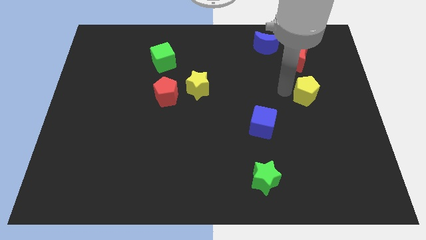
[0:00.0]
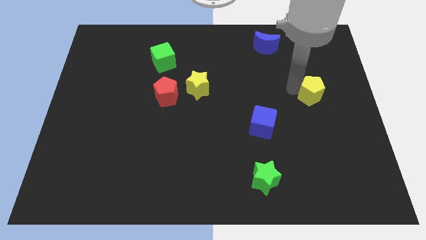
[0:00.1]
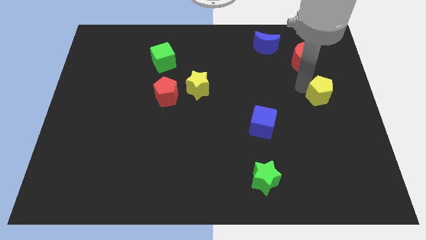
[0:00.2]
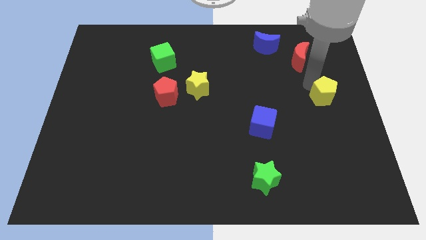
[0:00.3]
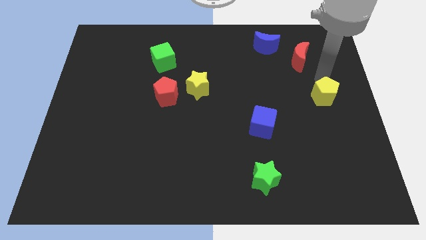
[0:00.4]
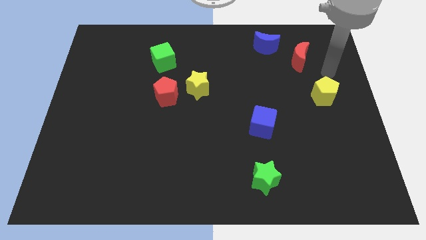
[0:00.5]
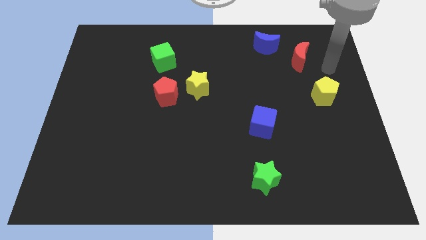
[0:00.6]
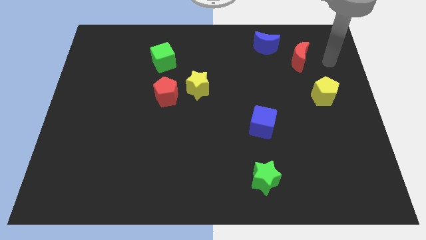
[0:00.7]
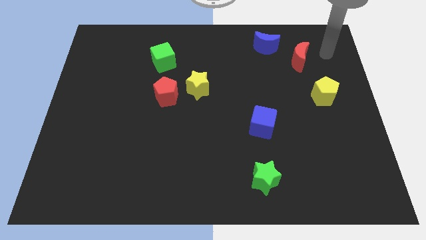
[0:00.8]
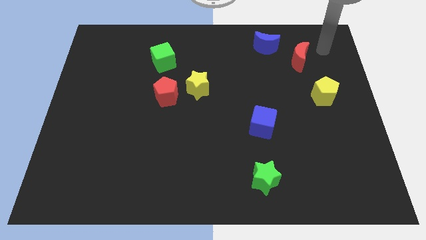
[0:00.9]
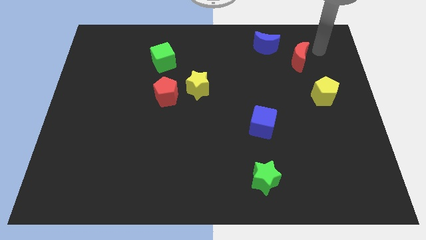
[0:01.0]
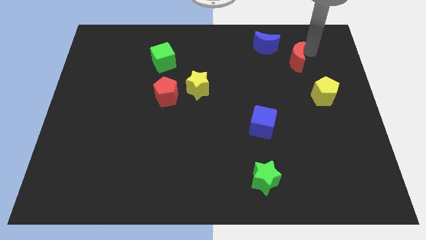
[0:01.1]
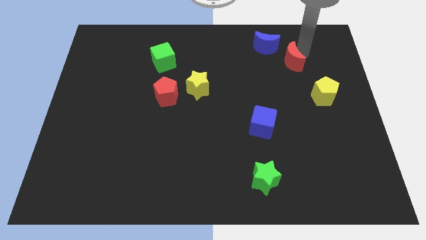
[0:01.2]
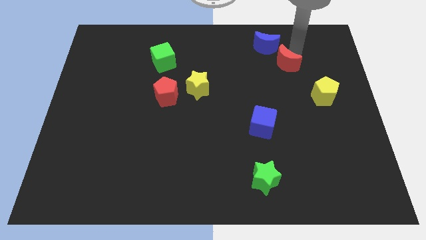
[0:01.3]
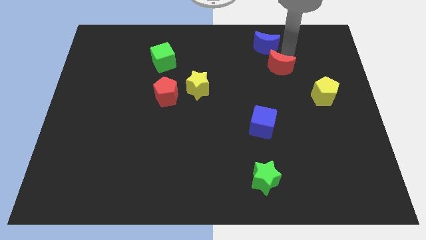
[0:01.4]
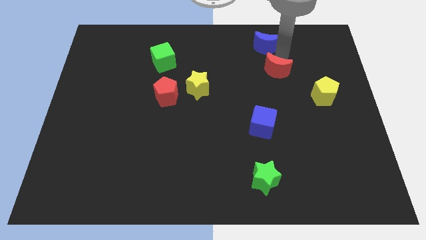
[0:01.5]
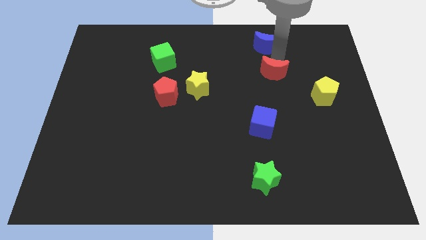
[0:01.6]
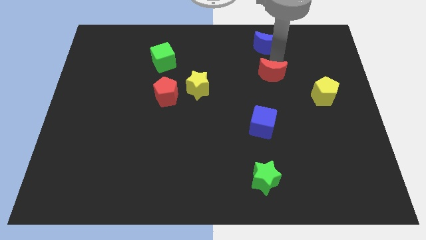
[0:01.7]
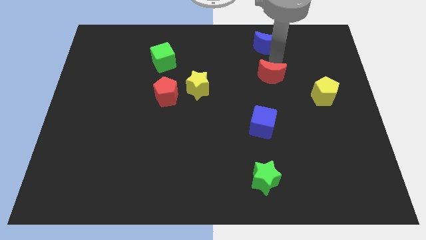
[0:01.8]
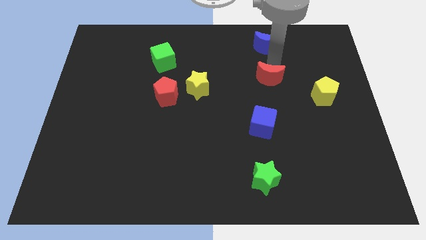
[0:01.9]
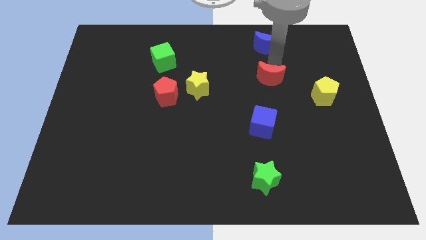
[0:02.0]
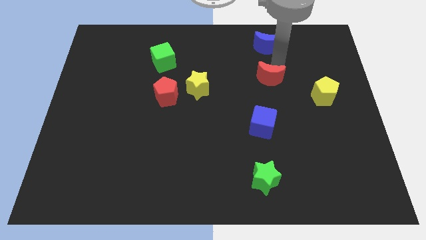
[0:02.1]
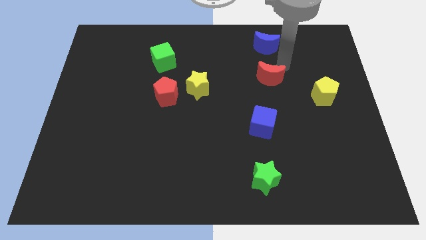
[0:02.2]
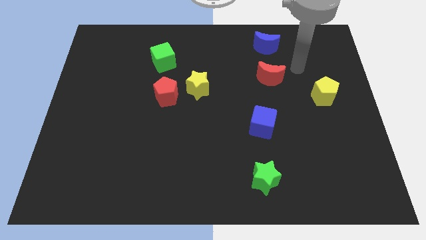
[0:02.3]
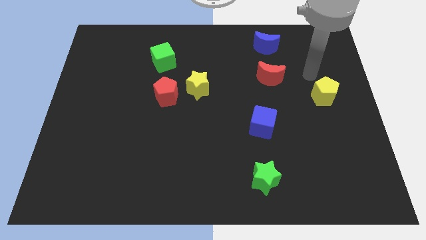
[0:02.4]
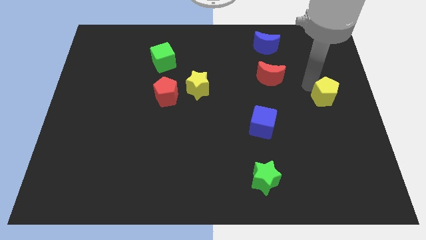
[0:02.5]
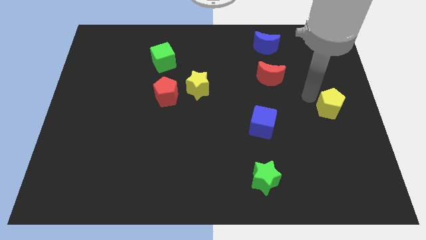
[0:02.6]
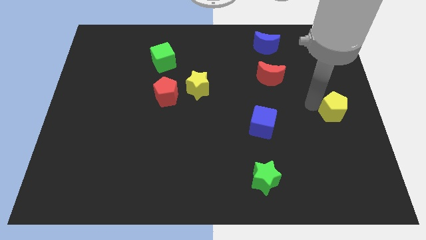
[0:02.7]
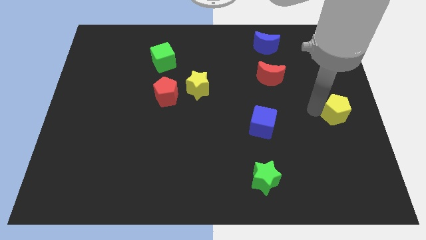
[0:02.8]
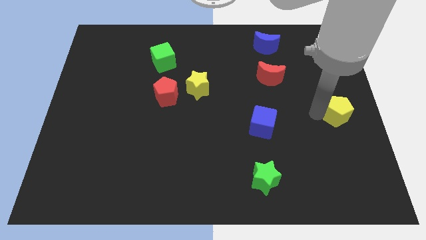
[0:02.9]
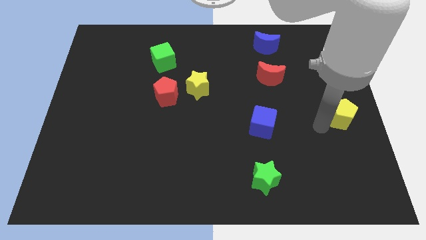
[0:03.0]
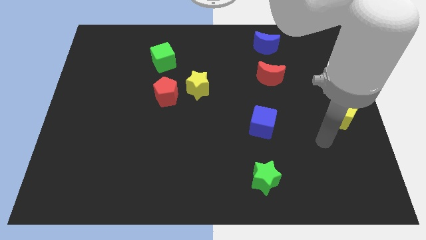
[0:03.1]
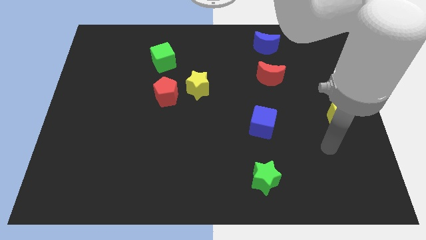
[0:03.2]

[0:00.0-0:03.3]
put the red crescent in between the blue crescent and the blue cube

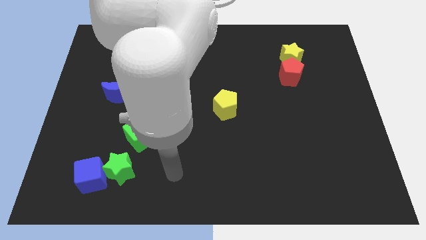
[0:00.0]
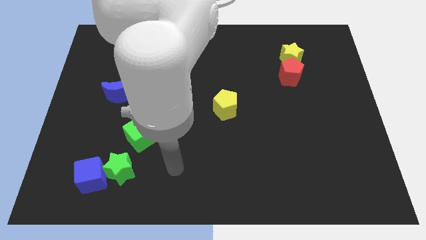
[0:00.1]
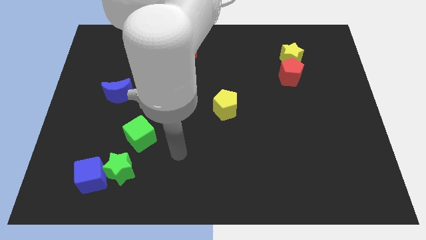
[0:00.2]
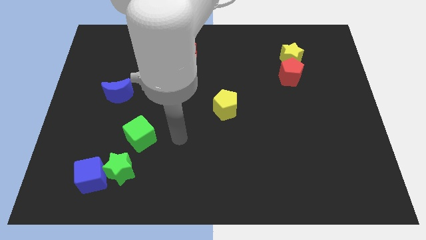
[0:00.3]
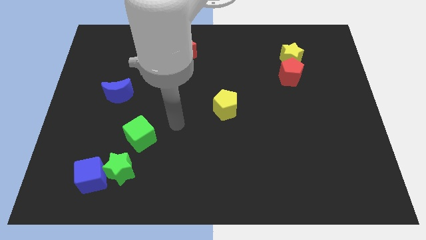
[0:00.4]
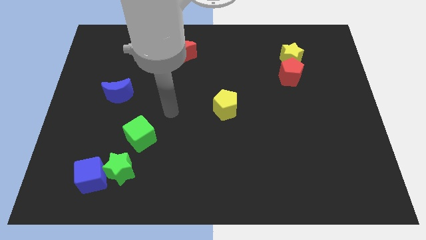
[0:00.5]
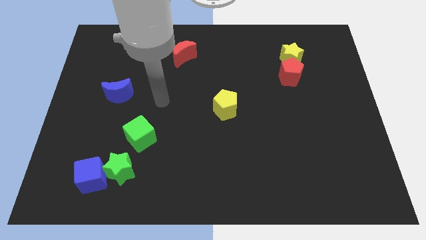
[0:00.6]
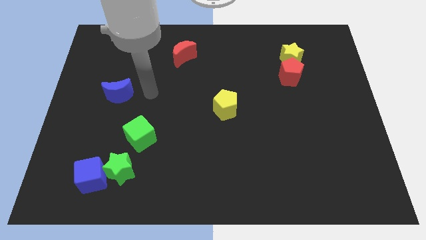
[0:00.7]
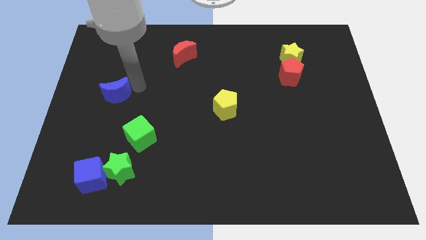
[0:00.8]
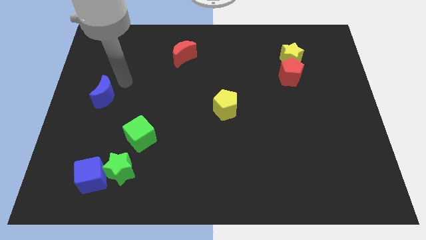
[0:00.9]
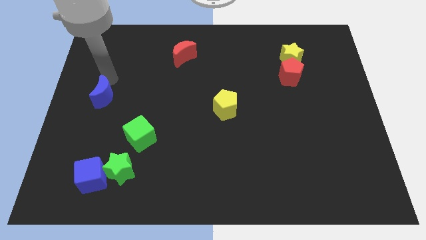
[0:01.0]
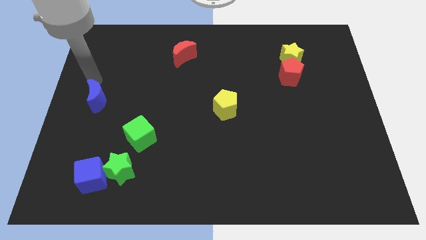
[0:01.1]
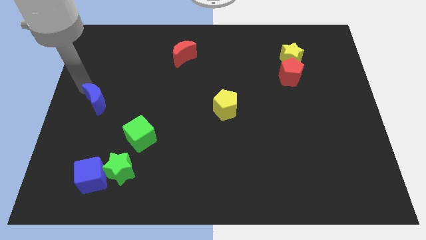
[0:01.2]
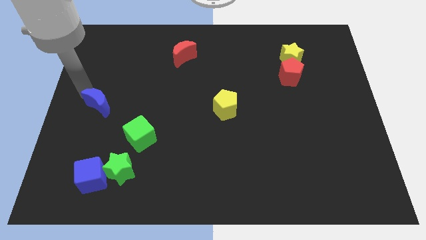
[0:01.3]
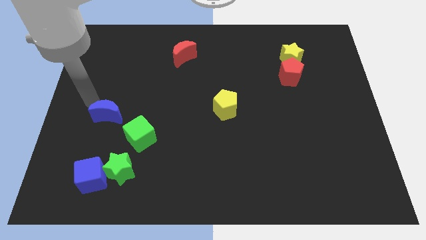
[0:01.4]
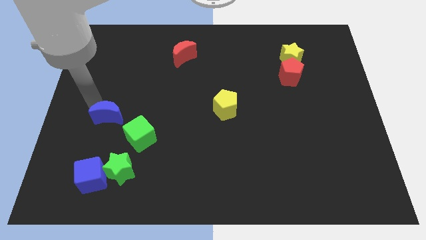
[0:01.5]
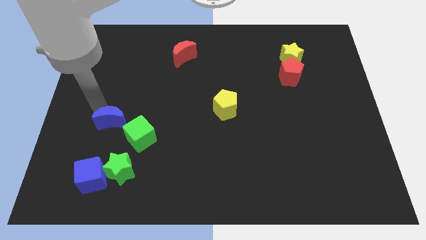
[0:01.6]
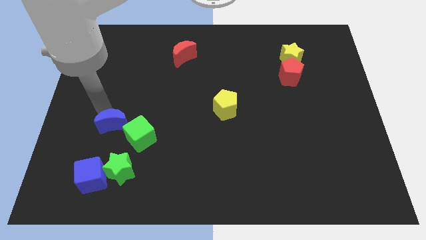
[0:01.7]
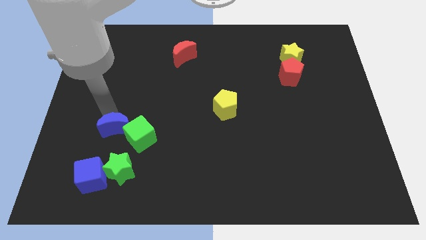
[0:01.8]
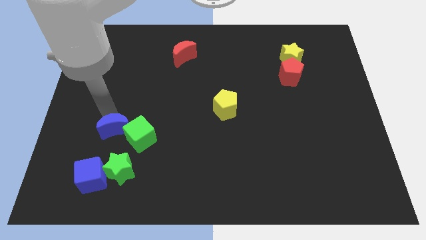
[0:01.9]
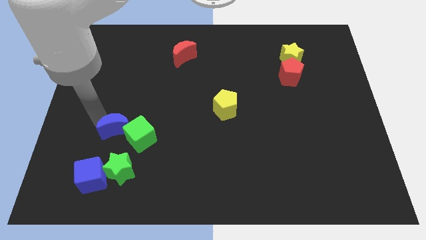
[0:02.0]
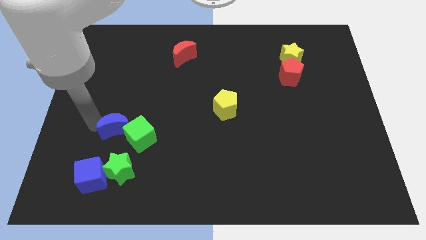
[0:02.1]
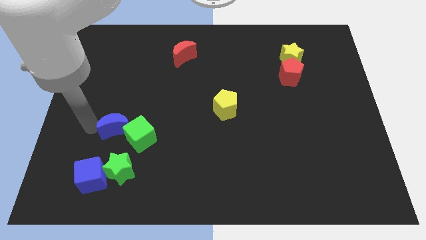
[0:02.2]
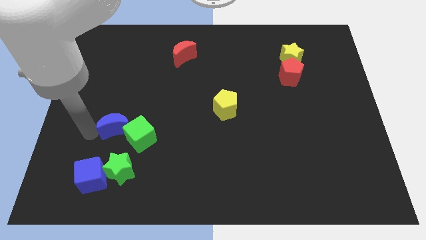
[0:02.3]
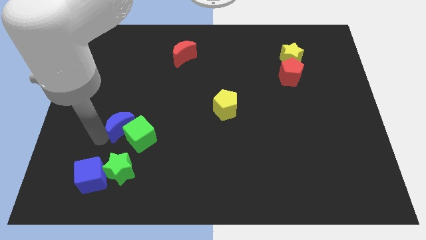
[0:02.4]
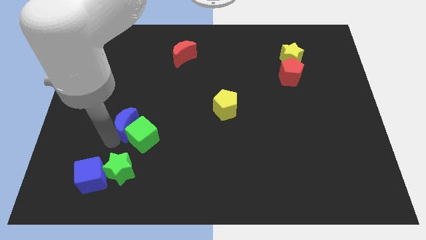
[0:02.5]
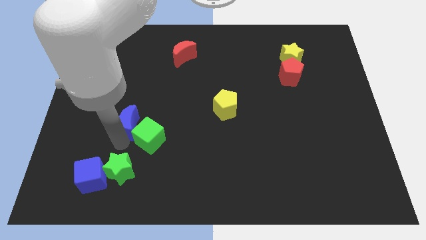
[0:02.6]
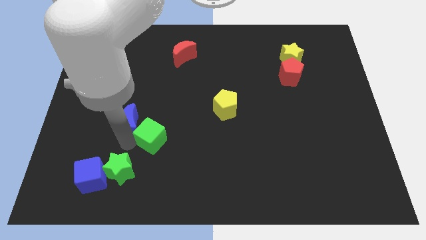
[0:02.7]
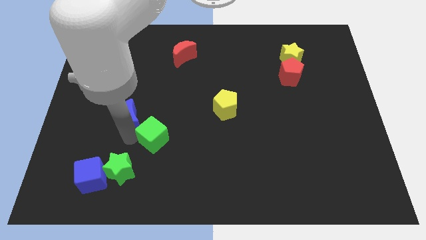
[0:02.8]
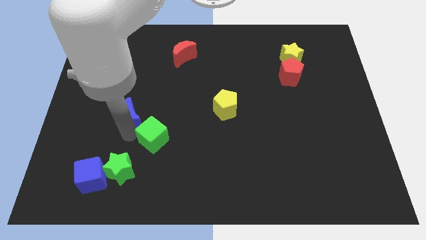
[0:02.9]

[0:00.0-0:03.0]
move the blue crescent towards the green cube

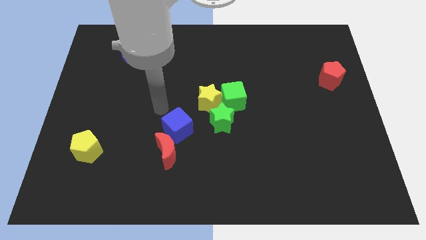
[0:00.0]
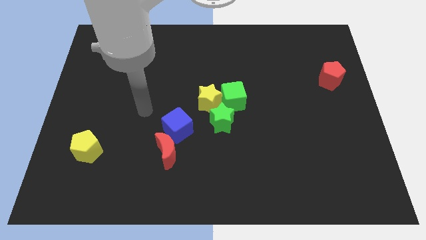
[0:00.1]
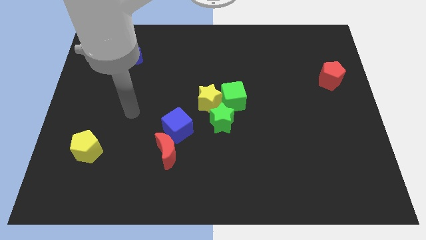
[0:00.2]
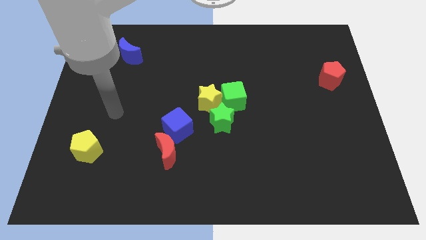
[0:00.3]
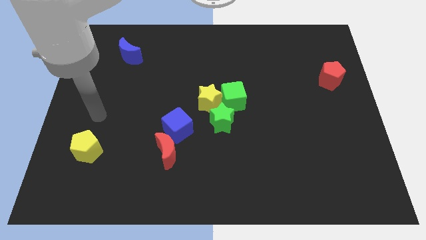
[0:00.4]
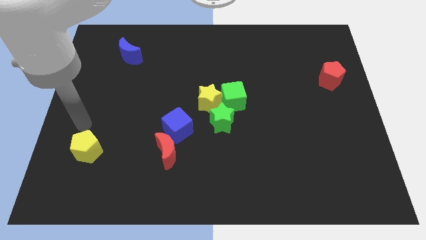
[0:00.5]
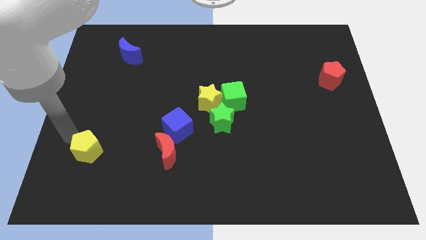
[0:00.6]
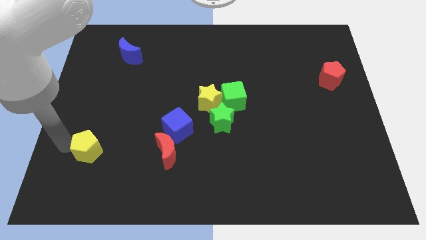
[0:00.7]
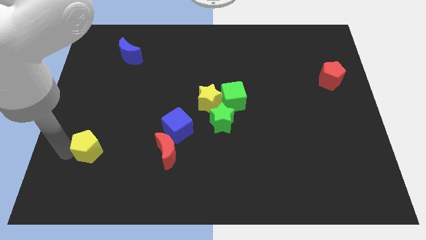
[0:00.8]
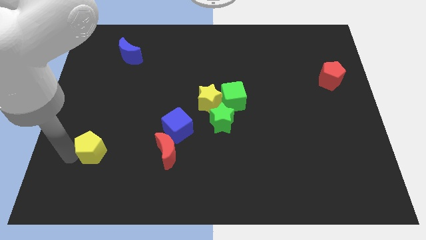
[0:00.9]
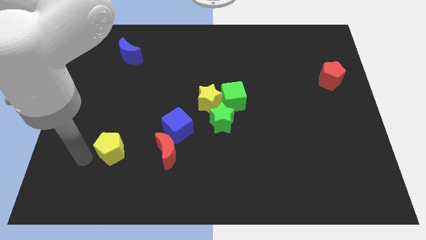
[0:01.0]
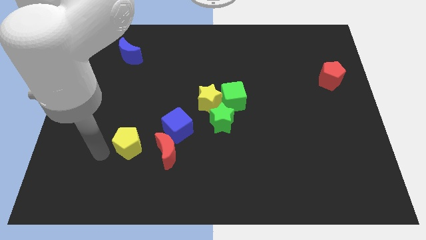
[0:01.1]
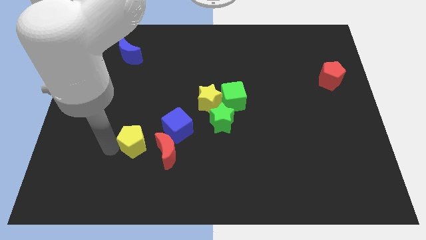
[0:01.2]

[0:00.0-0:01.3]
slightly move the yellow pentagon towards the right

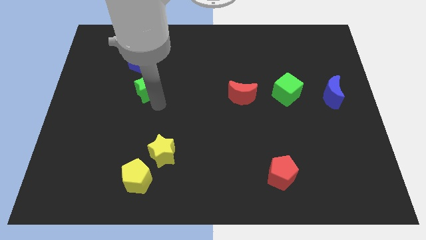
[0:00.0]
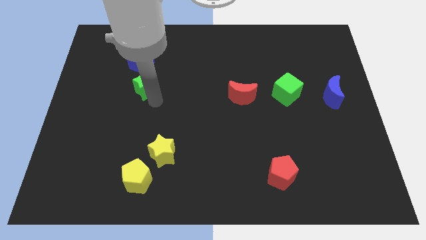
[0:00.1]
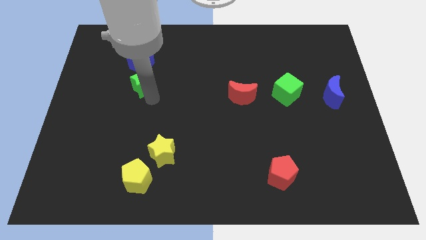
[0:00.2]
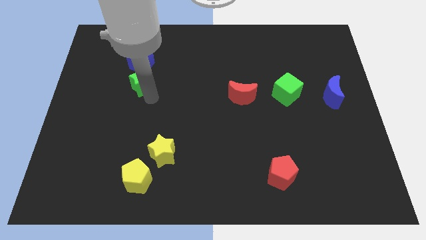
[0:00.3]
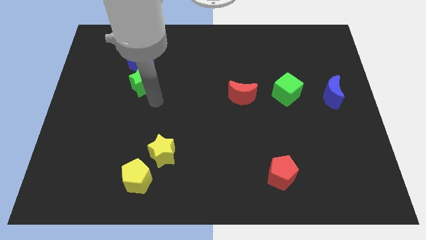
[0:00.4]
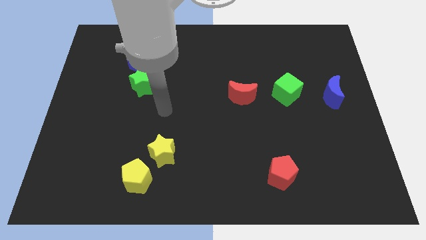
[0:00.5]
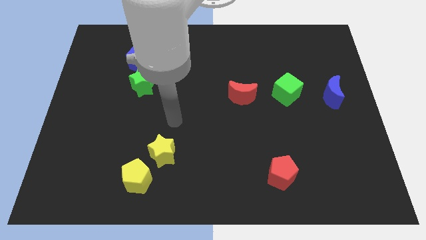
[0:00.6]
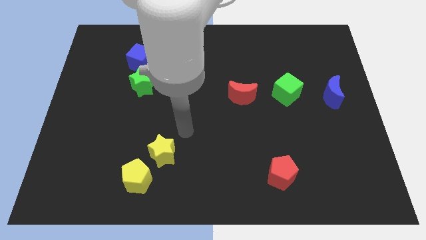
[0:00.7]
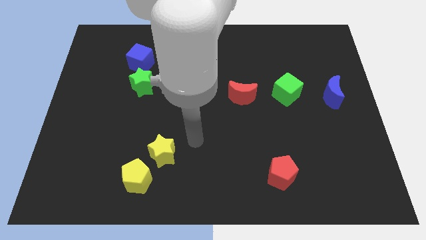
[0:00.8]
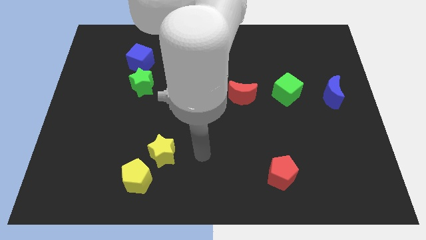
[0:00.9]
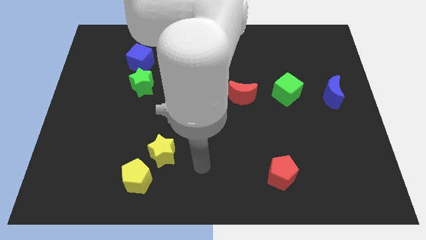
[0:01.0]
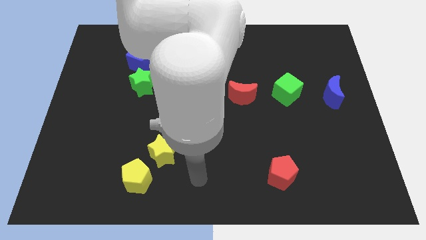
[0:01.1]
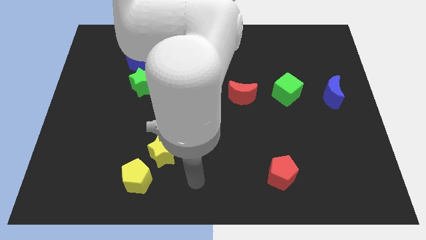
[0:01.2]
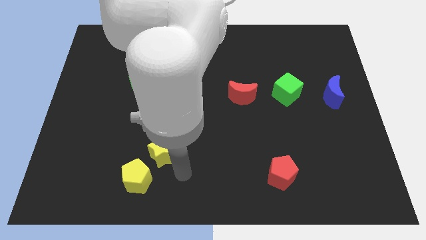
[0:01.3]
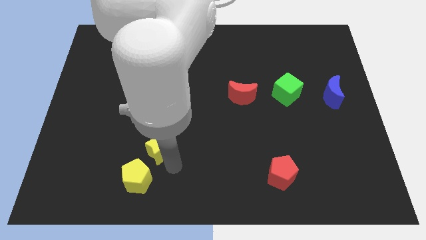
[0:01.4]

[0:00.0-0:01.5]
slide green star into the blue cube
